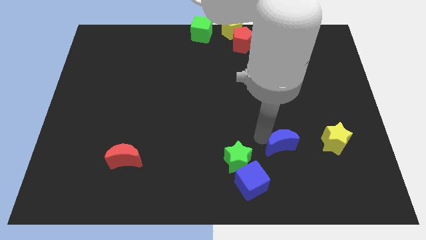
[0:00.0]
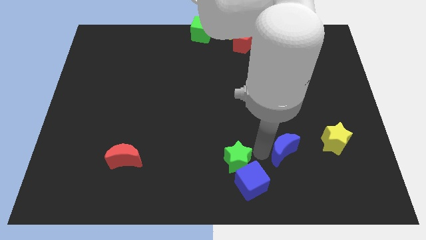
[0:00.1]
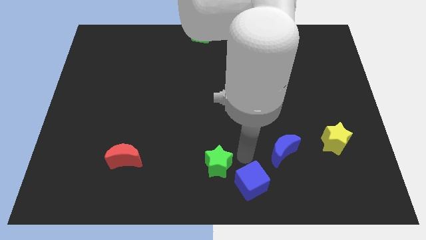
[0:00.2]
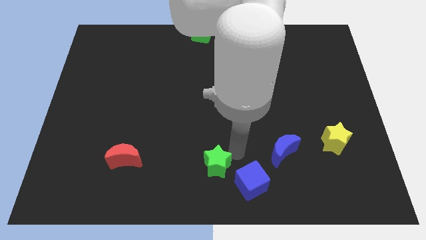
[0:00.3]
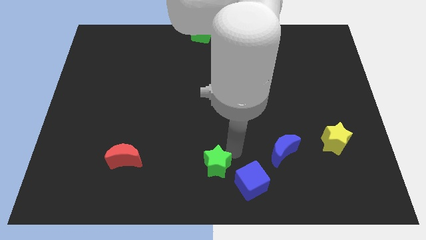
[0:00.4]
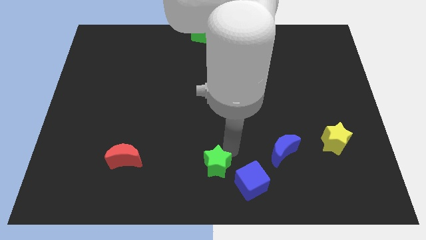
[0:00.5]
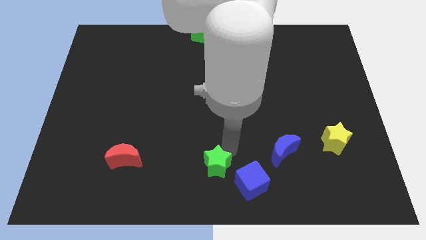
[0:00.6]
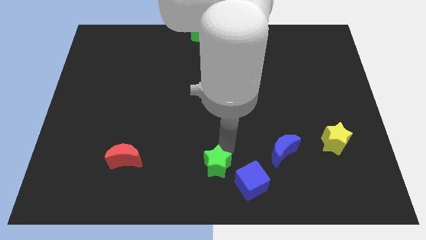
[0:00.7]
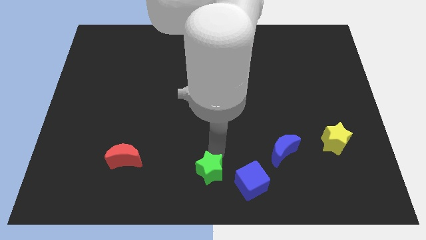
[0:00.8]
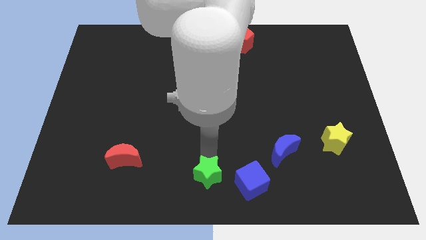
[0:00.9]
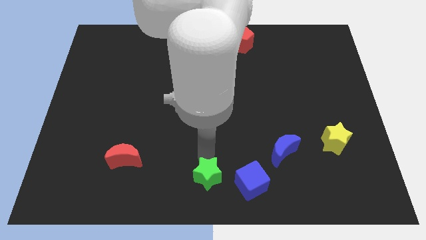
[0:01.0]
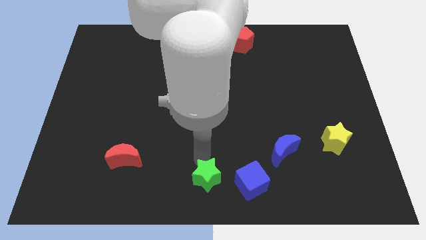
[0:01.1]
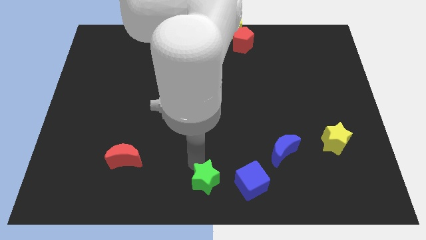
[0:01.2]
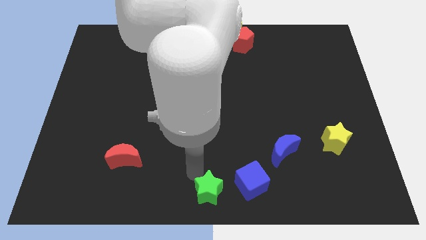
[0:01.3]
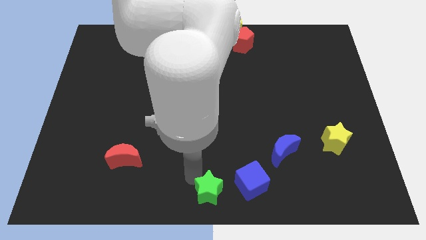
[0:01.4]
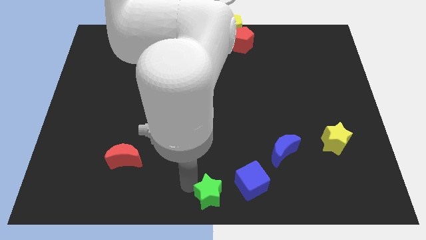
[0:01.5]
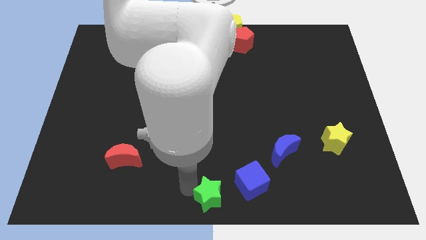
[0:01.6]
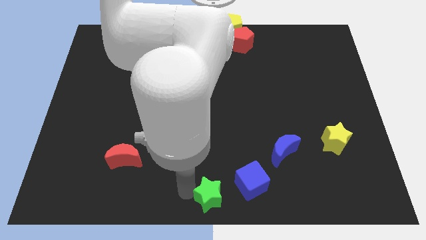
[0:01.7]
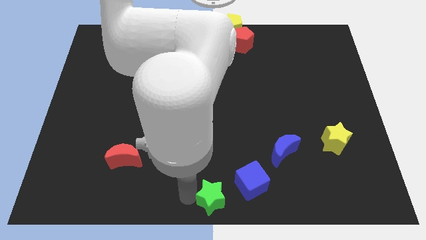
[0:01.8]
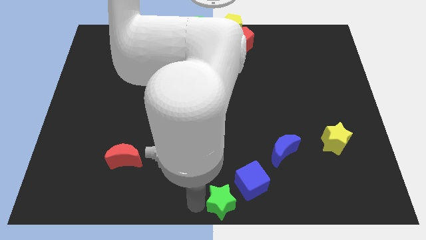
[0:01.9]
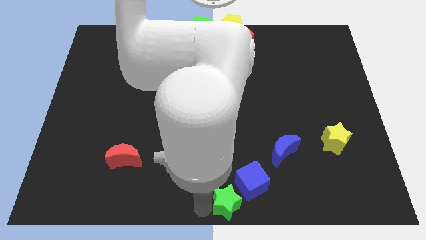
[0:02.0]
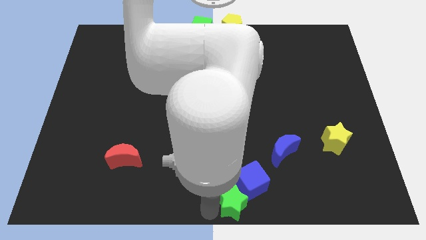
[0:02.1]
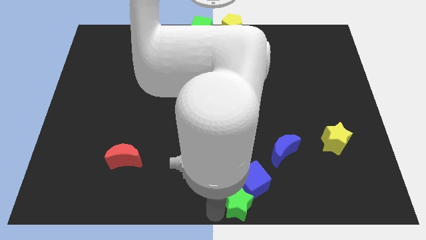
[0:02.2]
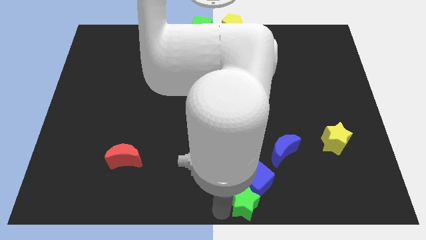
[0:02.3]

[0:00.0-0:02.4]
put the green star into blue cube at the bottom center

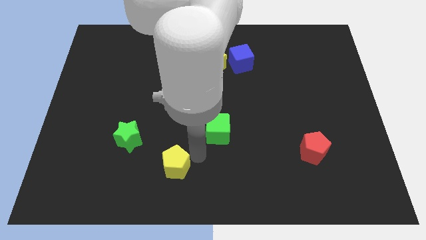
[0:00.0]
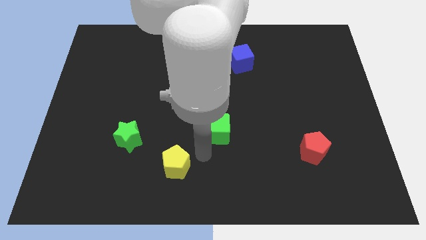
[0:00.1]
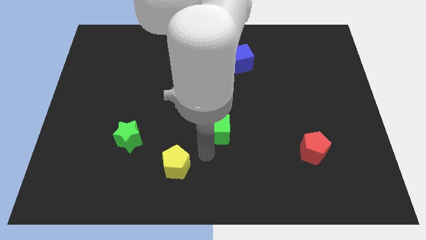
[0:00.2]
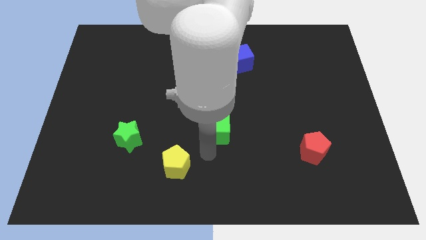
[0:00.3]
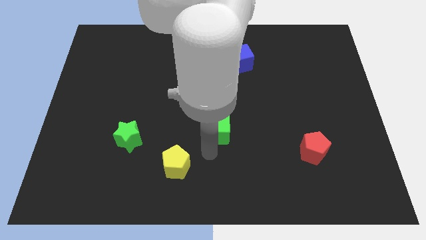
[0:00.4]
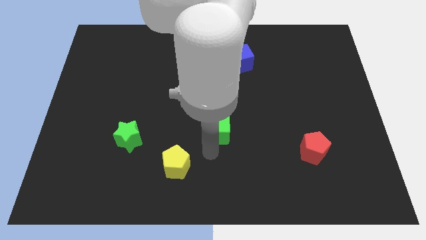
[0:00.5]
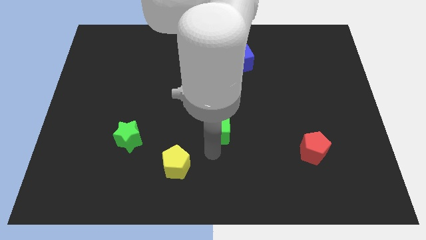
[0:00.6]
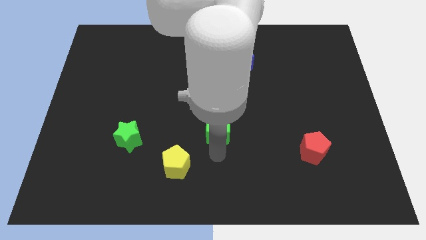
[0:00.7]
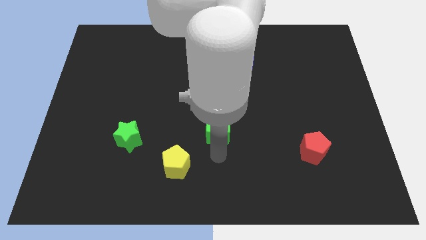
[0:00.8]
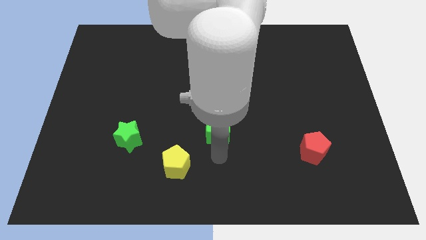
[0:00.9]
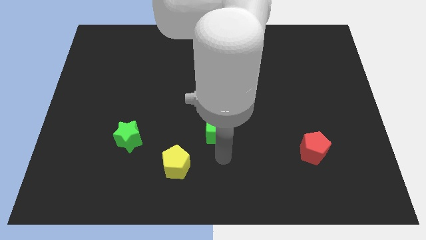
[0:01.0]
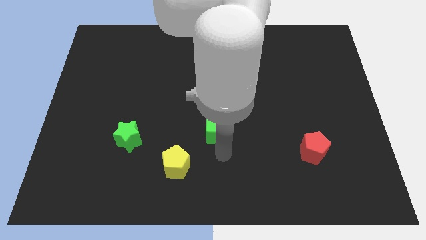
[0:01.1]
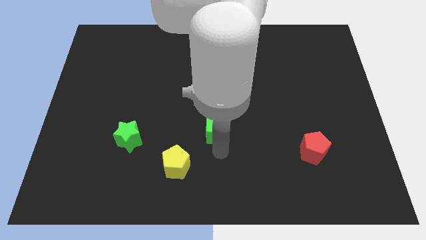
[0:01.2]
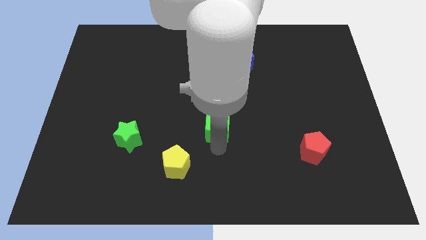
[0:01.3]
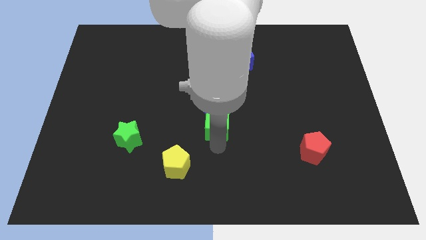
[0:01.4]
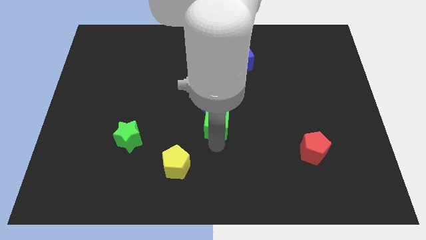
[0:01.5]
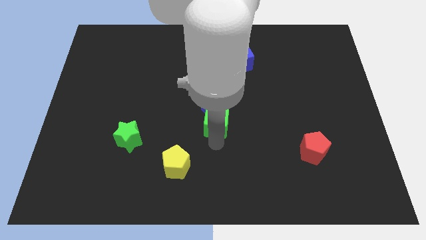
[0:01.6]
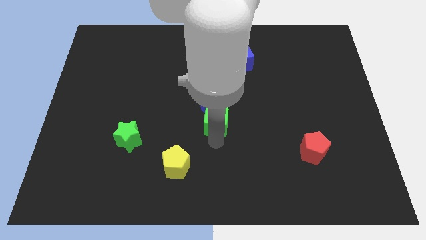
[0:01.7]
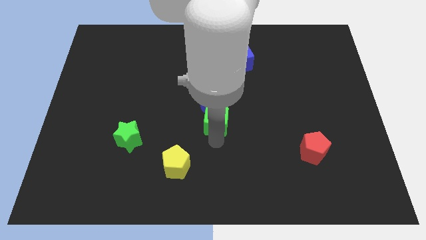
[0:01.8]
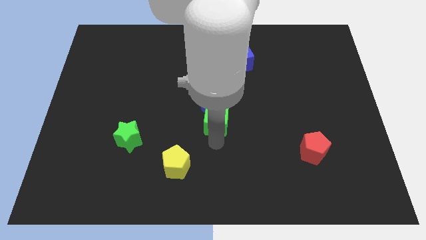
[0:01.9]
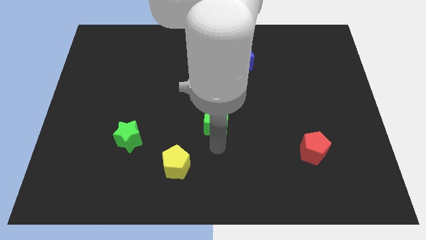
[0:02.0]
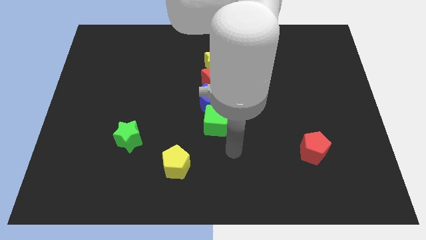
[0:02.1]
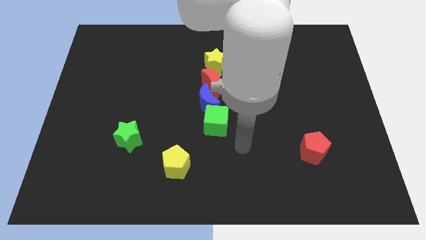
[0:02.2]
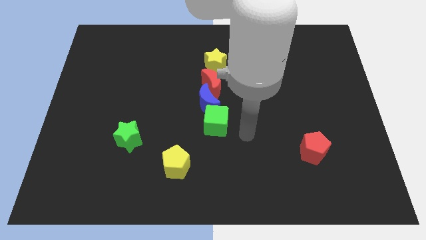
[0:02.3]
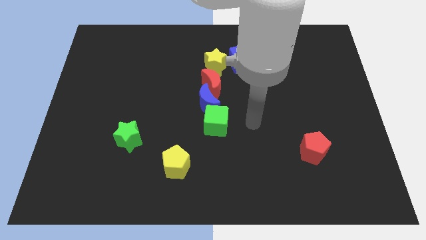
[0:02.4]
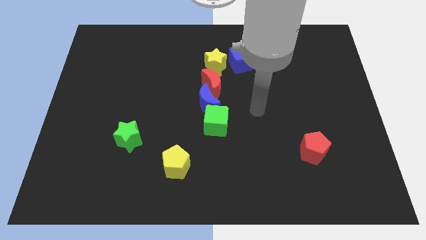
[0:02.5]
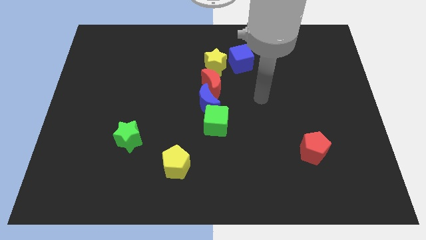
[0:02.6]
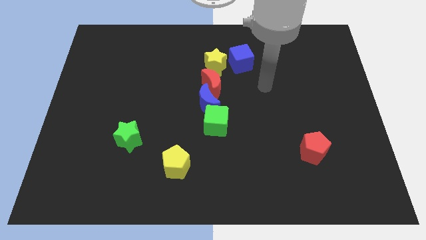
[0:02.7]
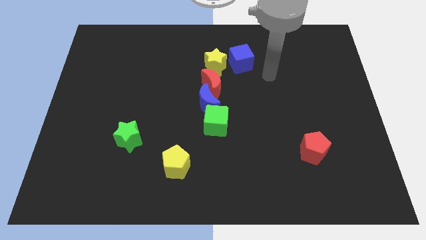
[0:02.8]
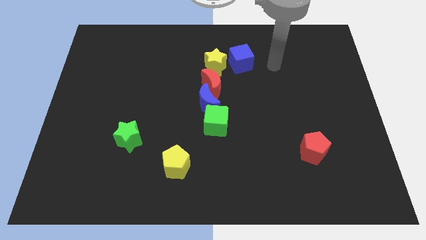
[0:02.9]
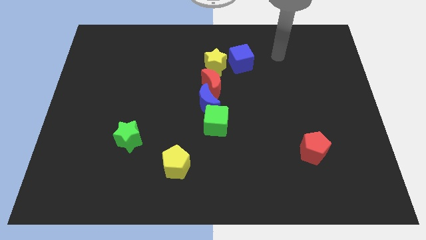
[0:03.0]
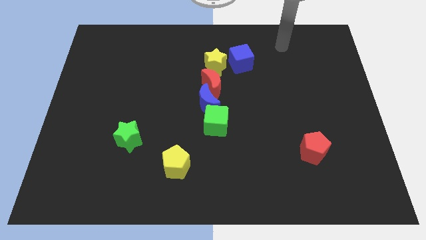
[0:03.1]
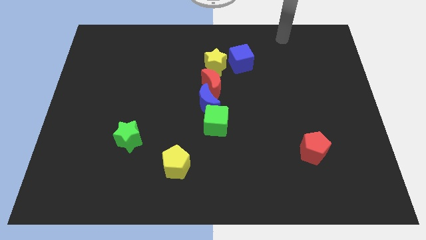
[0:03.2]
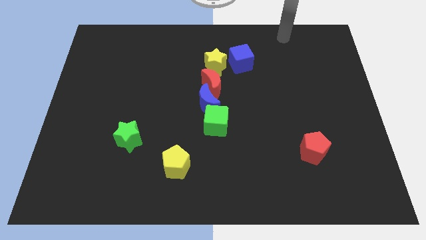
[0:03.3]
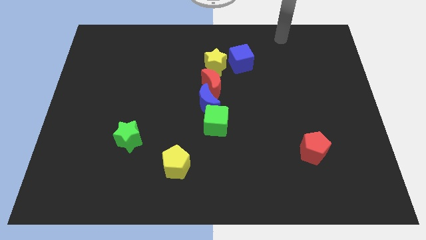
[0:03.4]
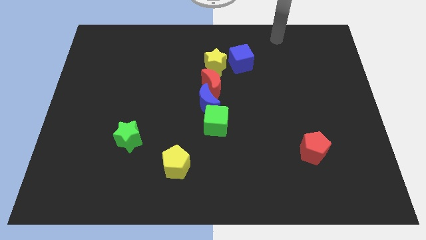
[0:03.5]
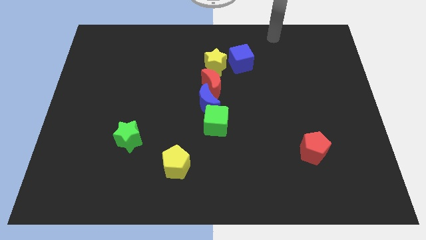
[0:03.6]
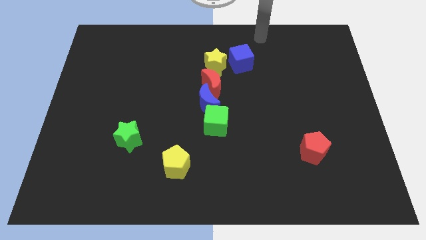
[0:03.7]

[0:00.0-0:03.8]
move the green cube into the blue crescent

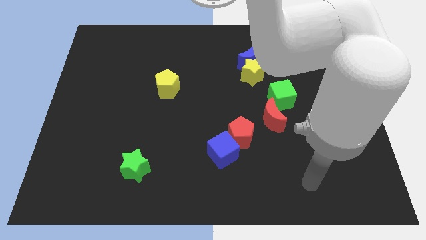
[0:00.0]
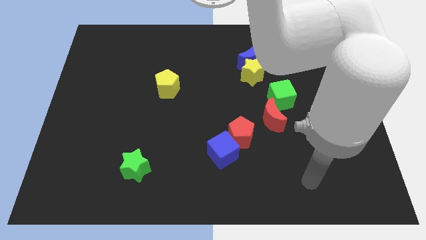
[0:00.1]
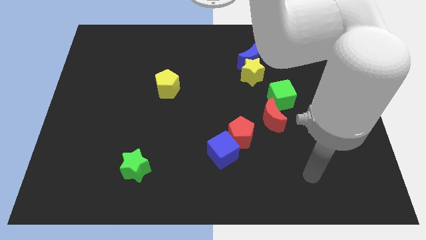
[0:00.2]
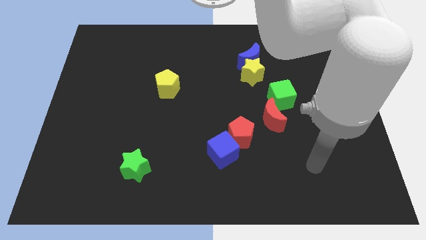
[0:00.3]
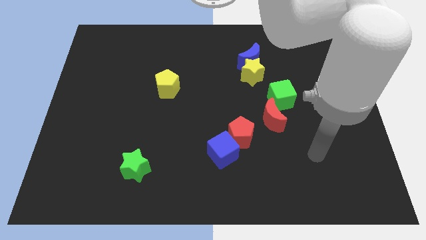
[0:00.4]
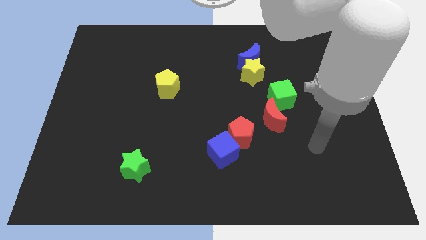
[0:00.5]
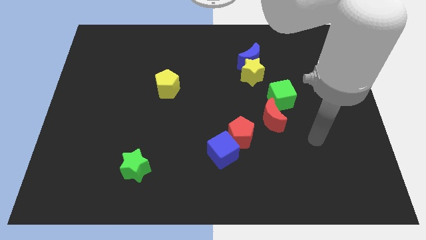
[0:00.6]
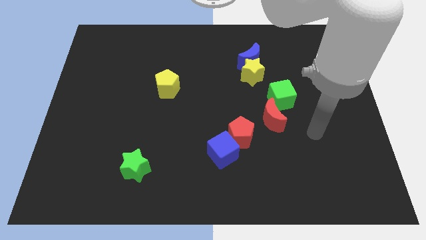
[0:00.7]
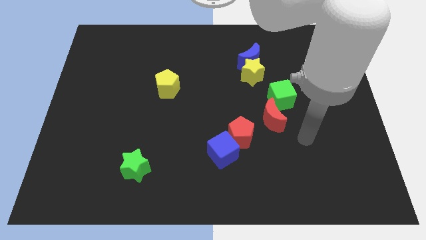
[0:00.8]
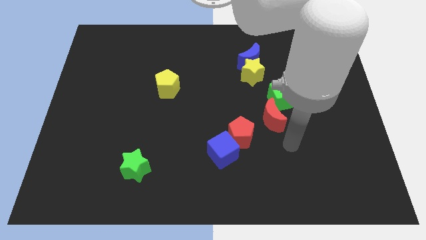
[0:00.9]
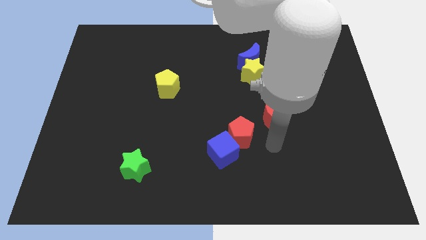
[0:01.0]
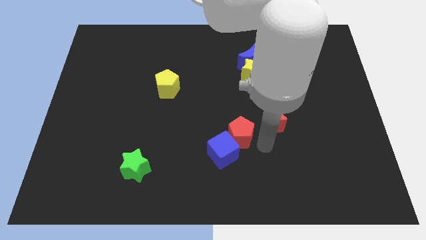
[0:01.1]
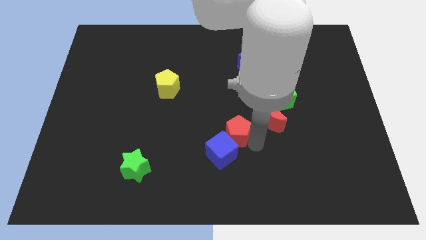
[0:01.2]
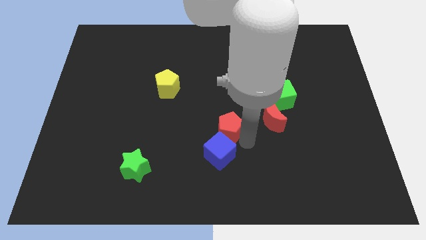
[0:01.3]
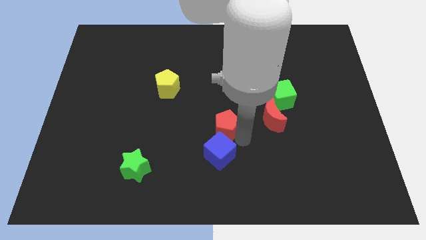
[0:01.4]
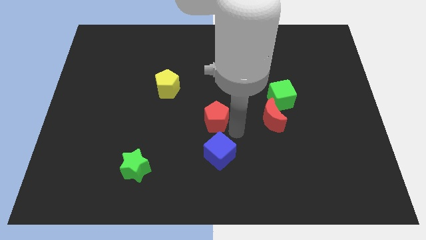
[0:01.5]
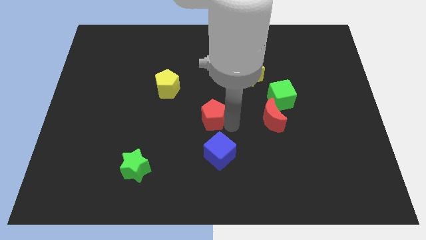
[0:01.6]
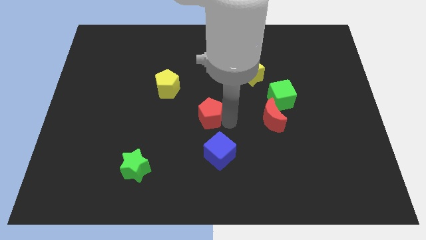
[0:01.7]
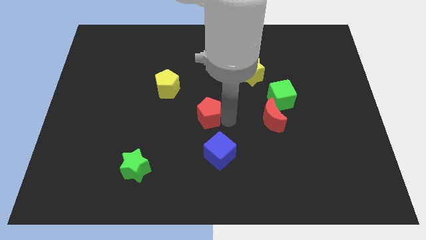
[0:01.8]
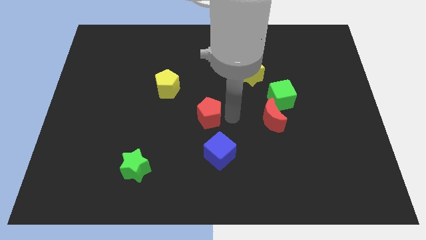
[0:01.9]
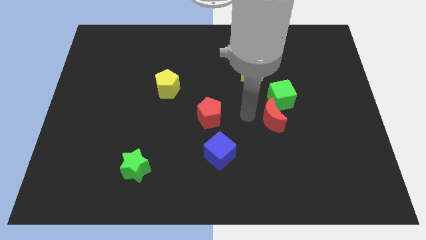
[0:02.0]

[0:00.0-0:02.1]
push red pentagon diagonally upwards

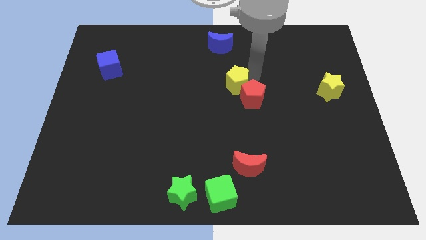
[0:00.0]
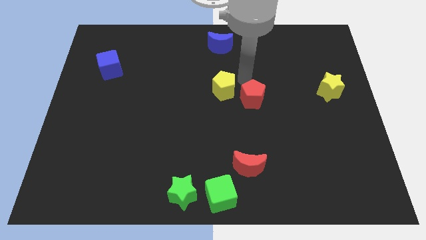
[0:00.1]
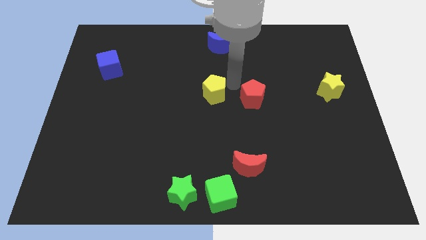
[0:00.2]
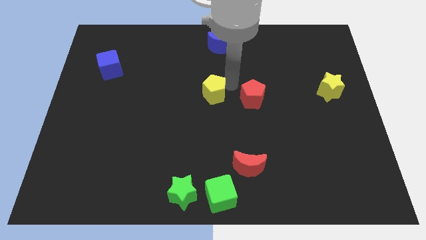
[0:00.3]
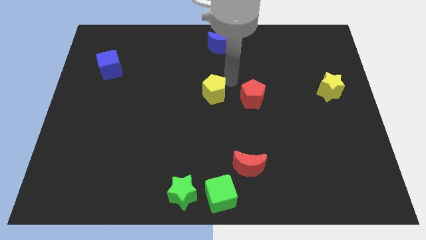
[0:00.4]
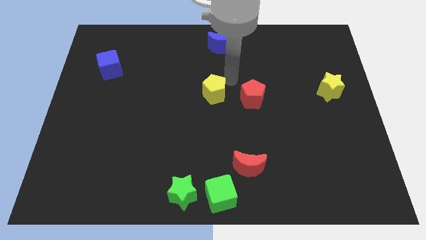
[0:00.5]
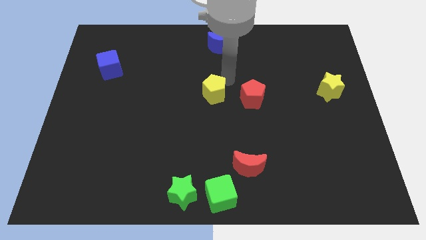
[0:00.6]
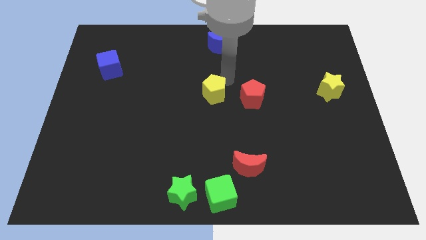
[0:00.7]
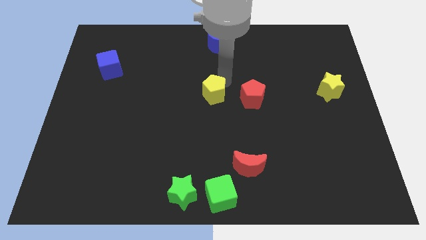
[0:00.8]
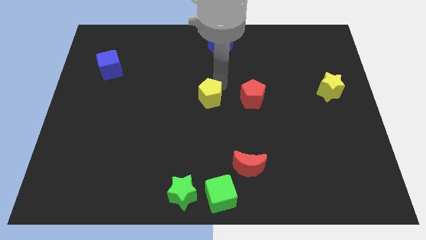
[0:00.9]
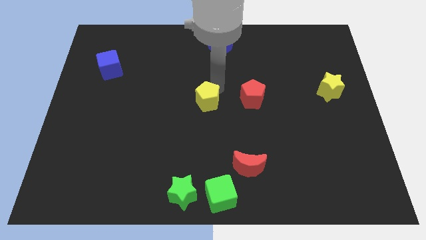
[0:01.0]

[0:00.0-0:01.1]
move yellow pentagon parallel left to red pentagon
